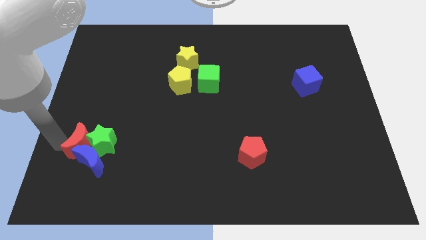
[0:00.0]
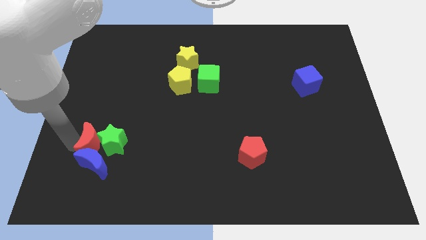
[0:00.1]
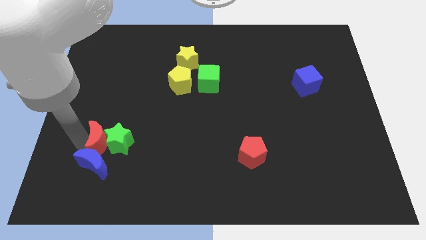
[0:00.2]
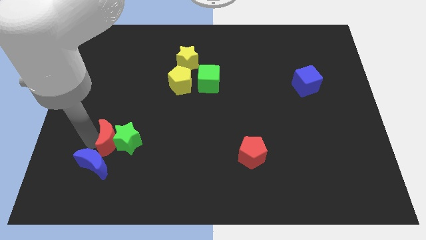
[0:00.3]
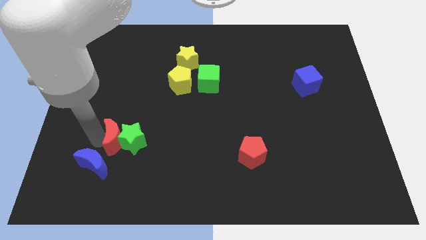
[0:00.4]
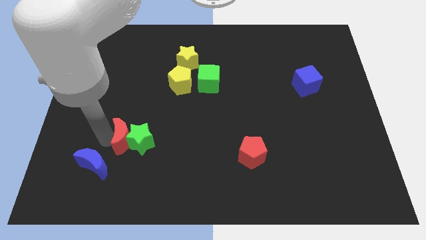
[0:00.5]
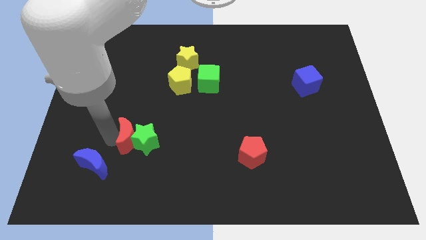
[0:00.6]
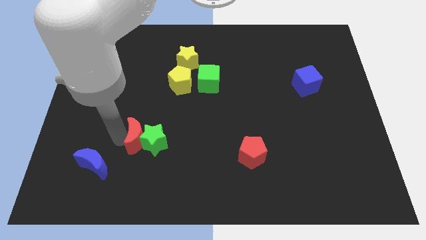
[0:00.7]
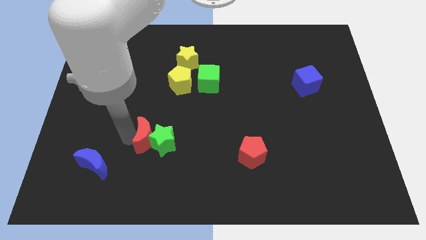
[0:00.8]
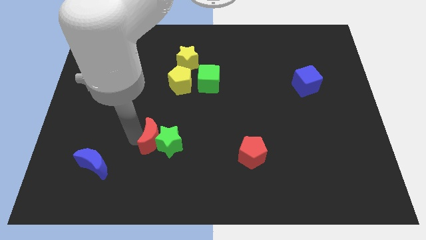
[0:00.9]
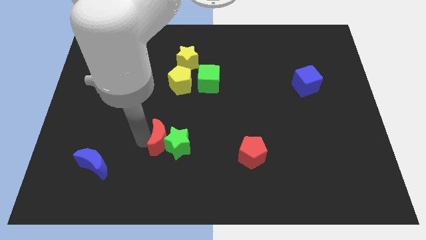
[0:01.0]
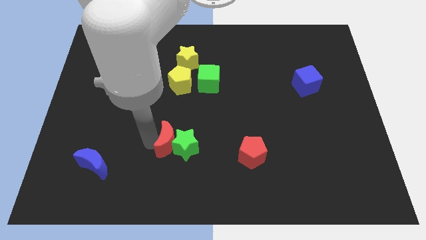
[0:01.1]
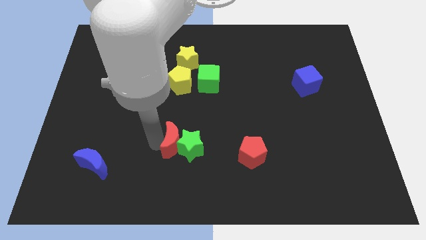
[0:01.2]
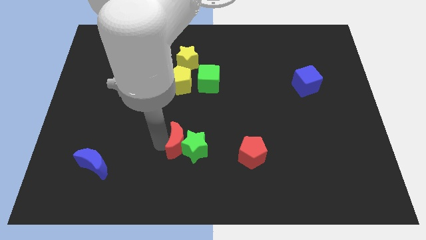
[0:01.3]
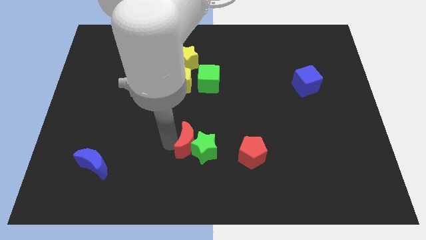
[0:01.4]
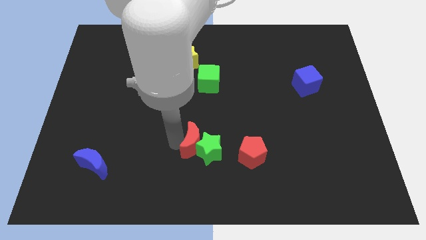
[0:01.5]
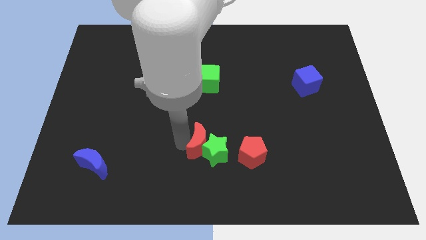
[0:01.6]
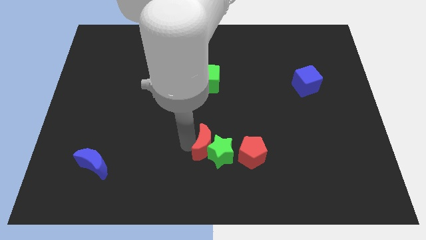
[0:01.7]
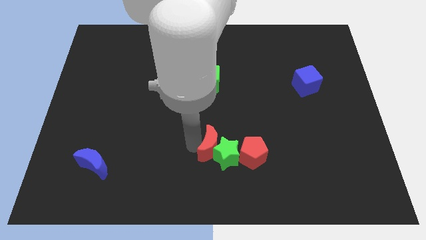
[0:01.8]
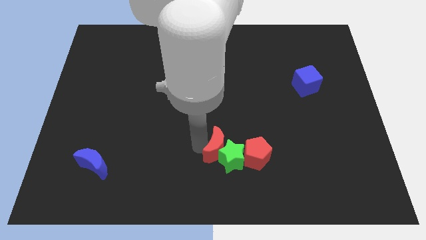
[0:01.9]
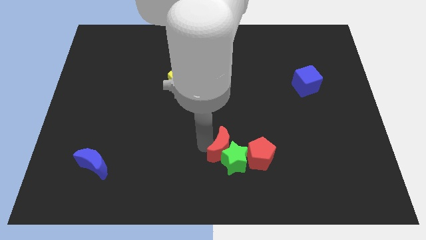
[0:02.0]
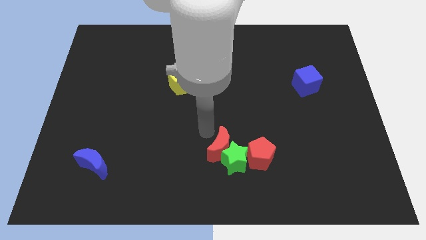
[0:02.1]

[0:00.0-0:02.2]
separate red moon and green star from blue moon

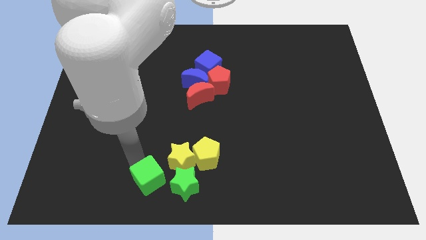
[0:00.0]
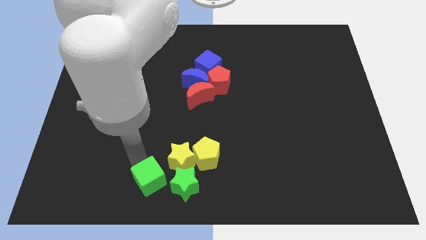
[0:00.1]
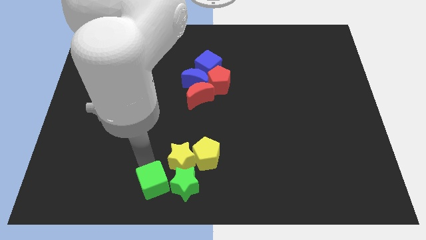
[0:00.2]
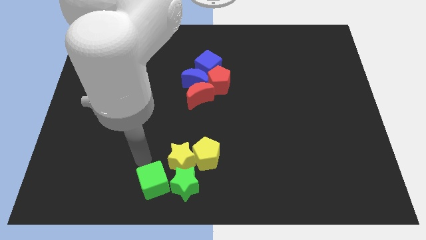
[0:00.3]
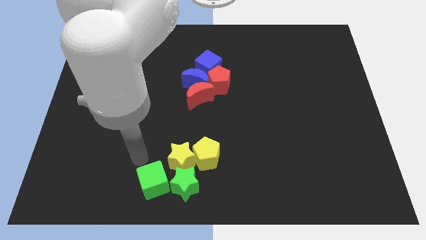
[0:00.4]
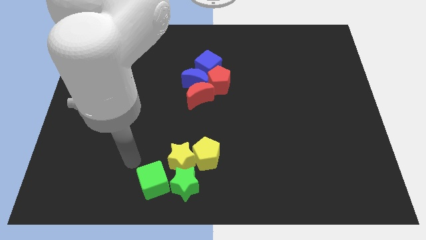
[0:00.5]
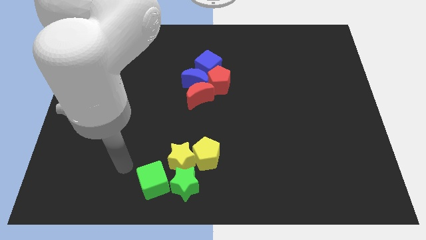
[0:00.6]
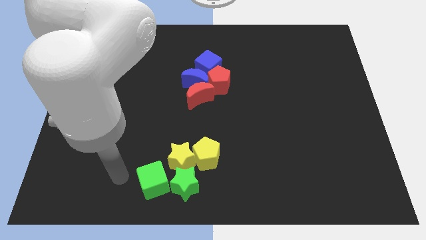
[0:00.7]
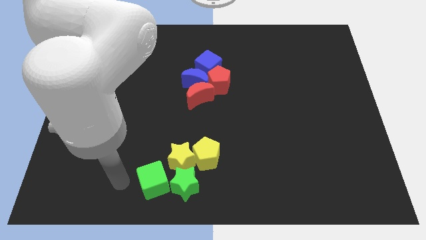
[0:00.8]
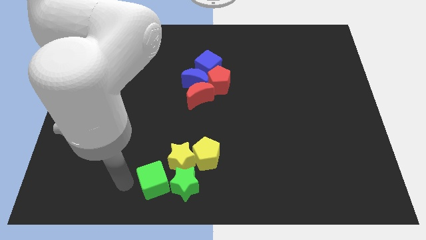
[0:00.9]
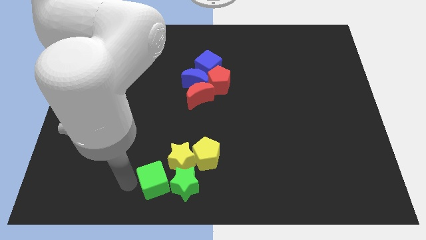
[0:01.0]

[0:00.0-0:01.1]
place the arm left to the green cube

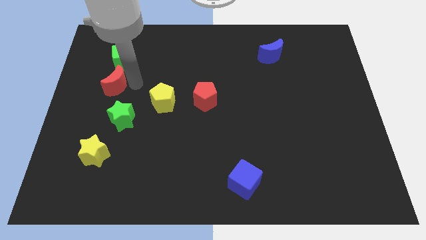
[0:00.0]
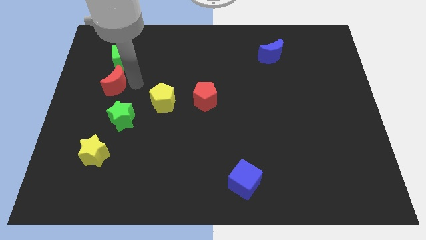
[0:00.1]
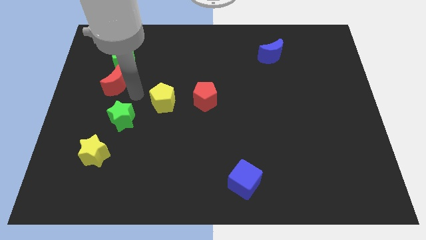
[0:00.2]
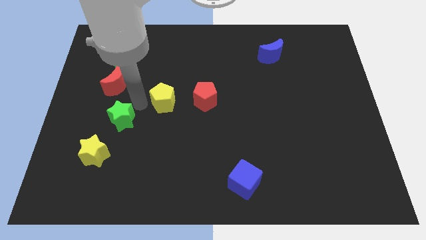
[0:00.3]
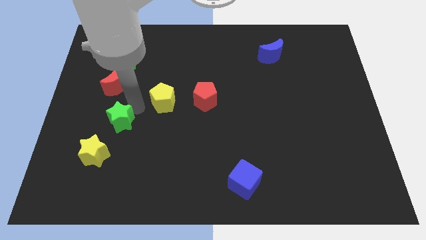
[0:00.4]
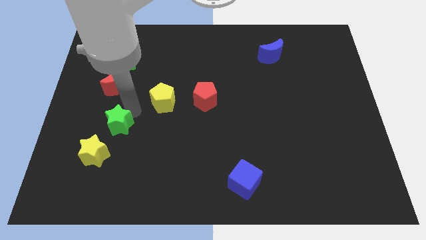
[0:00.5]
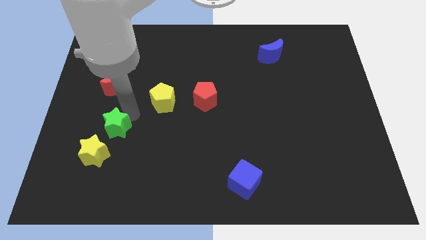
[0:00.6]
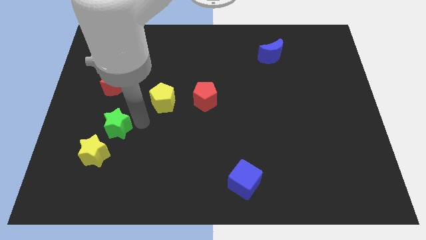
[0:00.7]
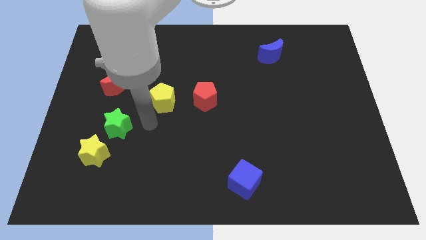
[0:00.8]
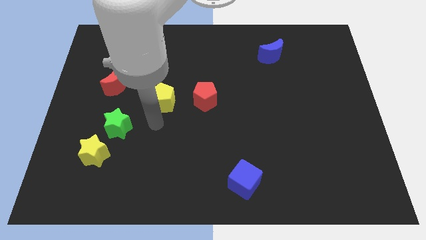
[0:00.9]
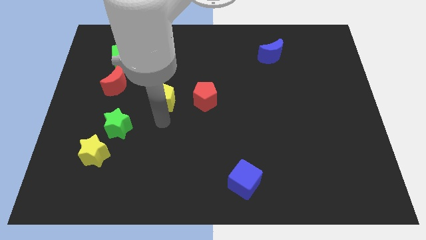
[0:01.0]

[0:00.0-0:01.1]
move the green star close to the yellow star

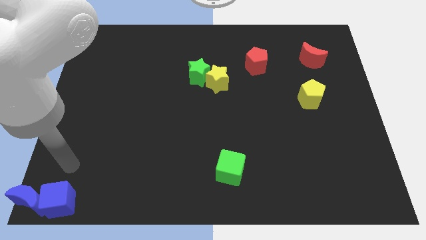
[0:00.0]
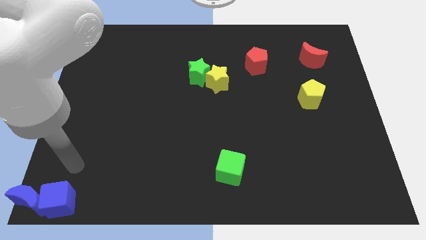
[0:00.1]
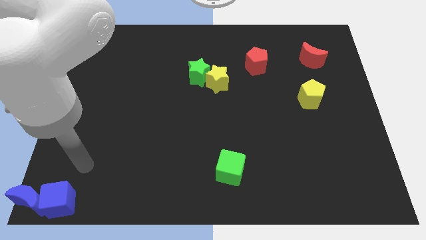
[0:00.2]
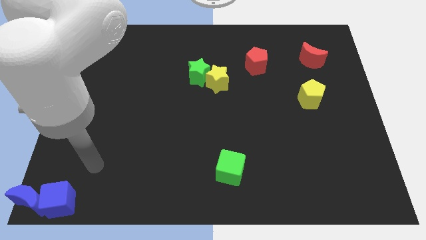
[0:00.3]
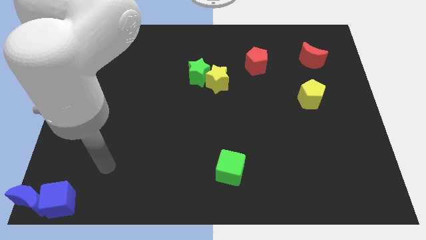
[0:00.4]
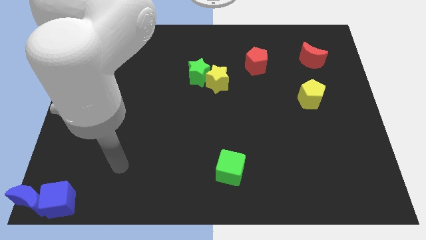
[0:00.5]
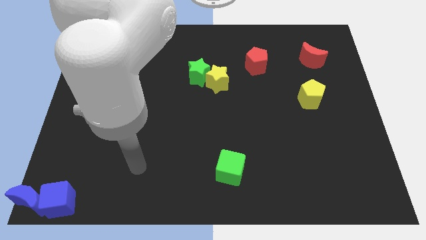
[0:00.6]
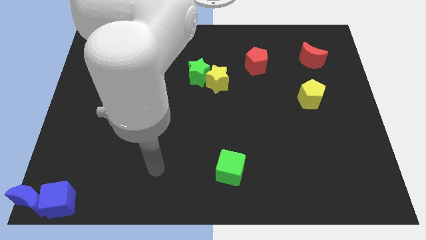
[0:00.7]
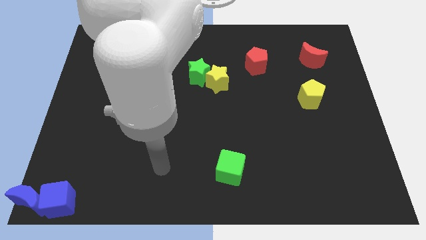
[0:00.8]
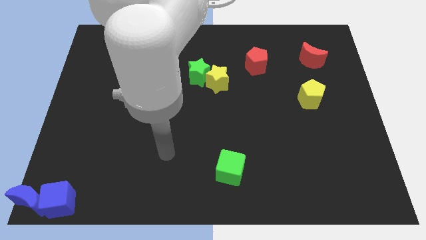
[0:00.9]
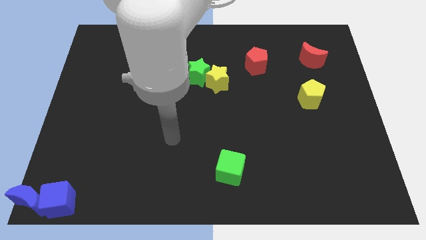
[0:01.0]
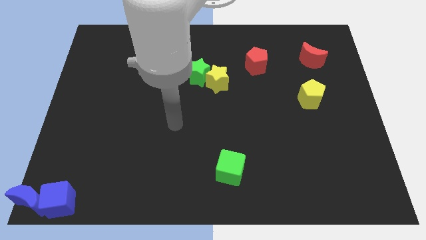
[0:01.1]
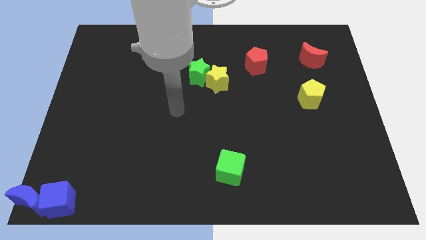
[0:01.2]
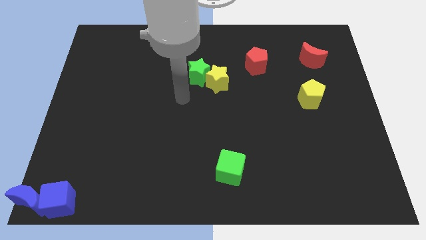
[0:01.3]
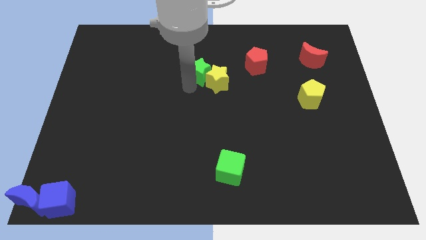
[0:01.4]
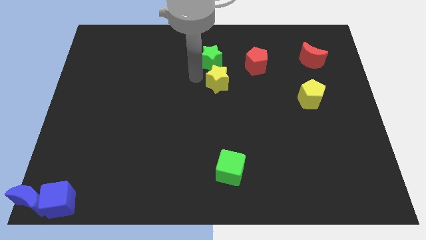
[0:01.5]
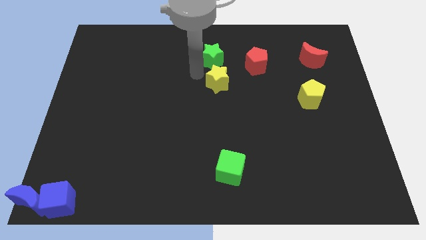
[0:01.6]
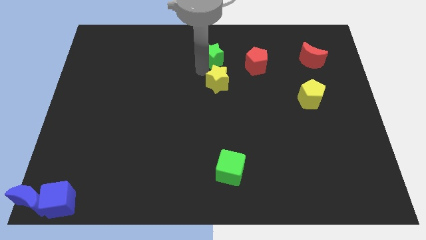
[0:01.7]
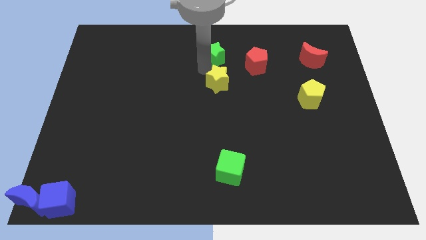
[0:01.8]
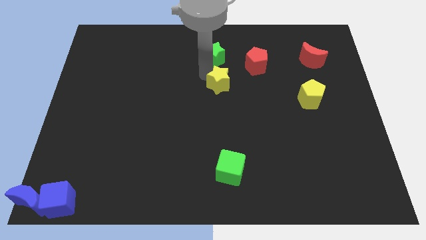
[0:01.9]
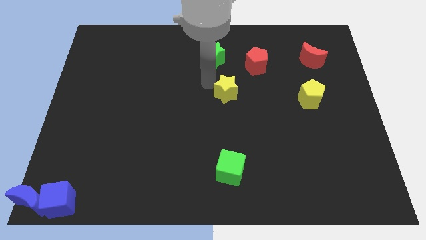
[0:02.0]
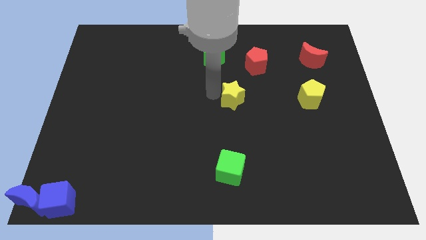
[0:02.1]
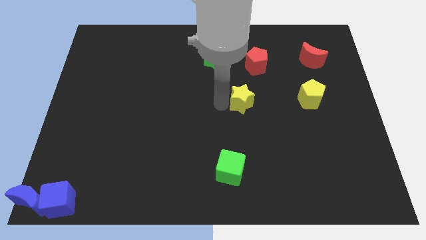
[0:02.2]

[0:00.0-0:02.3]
place the yellow star horizontally to the left side of the yellow pentagon

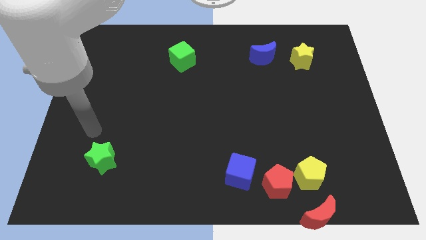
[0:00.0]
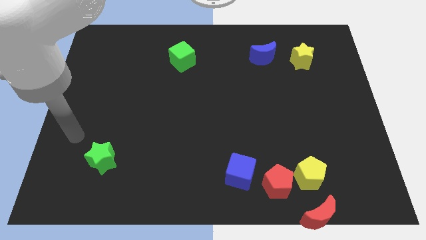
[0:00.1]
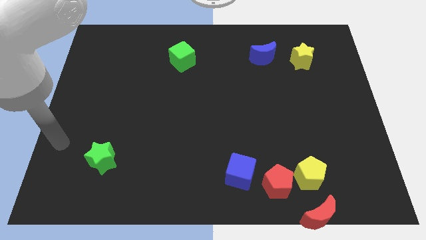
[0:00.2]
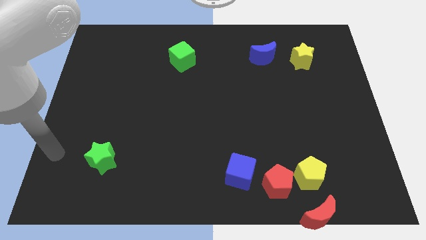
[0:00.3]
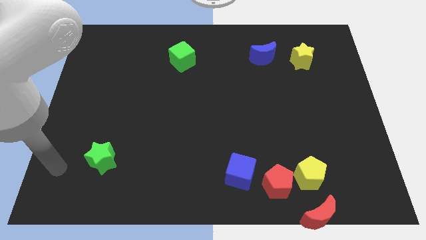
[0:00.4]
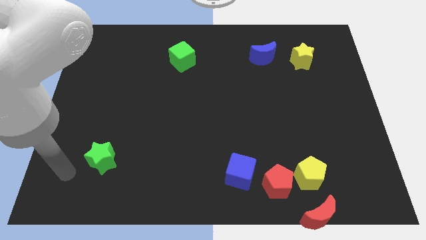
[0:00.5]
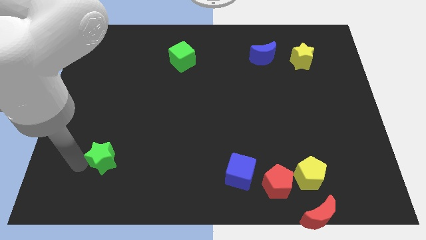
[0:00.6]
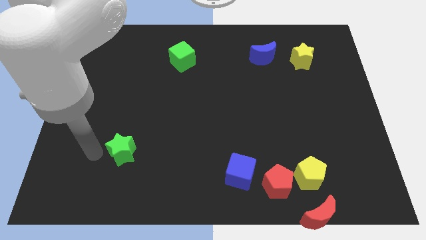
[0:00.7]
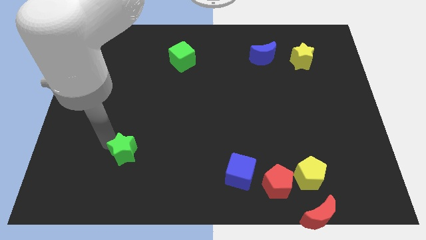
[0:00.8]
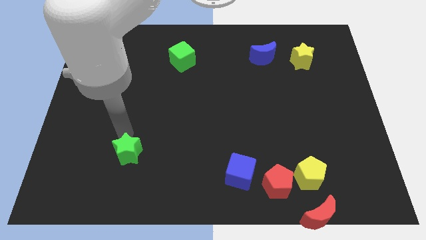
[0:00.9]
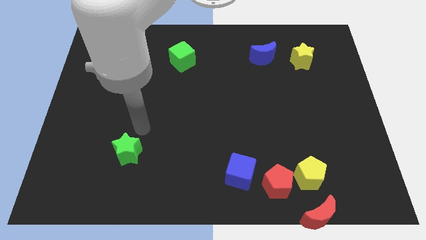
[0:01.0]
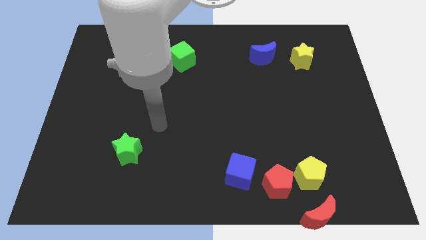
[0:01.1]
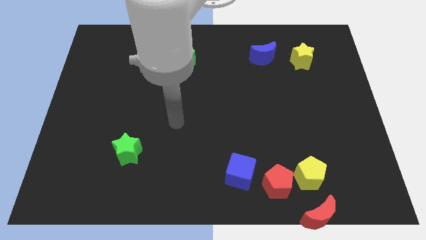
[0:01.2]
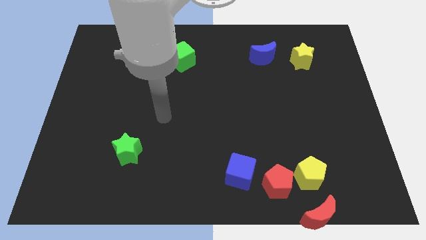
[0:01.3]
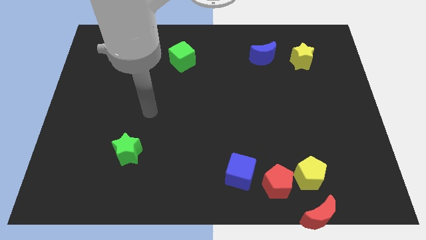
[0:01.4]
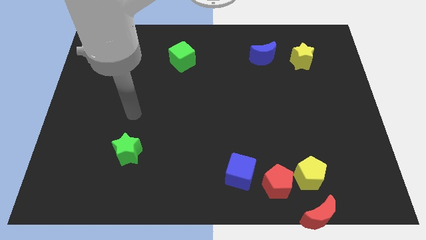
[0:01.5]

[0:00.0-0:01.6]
slightly push the green star towards the blue cube

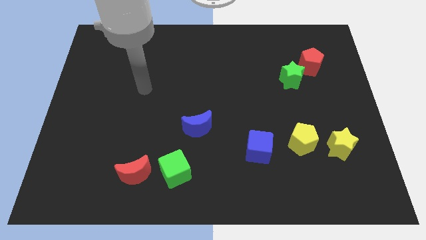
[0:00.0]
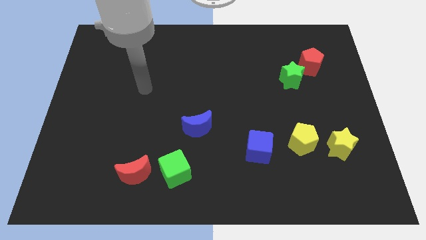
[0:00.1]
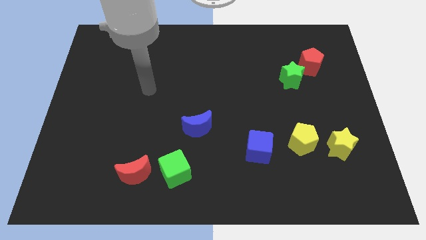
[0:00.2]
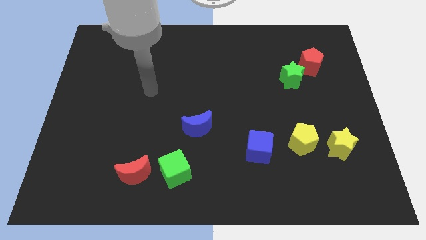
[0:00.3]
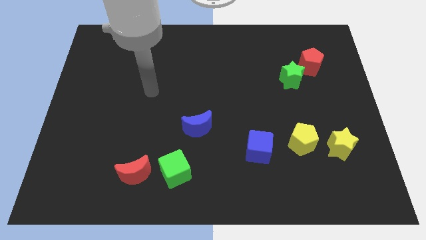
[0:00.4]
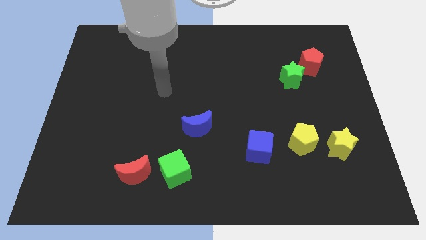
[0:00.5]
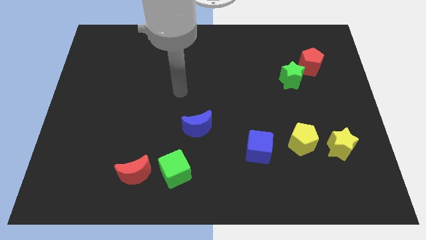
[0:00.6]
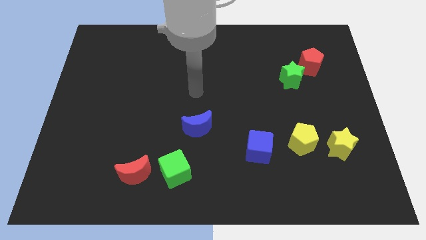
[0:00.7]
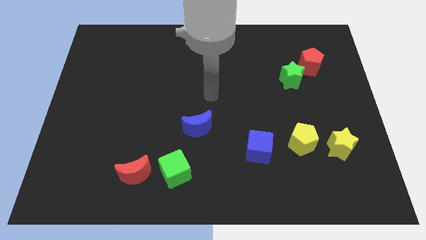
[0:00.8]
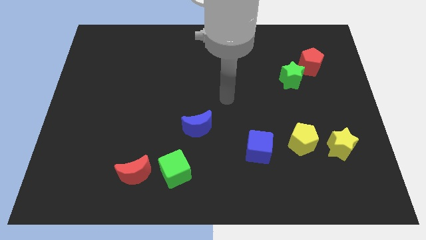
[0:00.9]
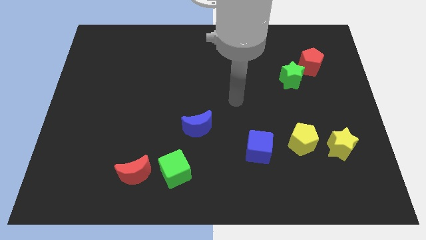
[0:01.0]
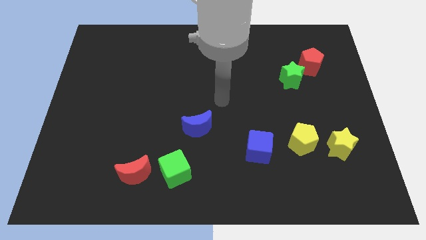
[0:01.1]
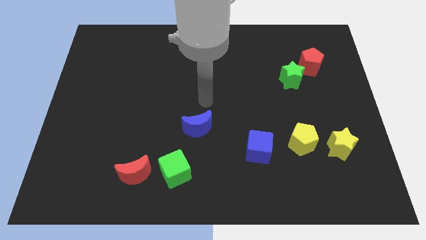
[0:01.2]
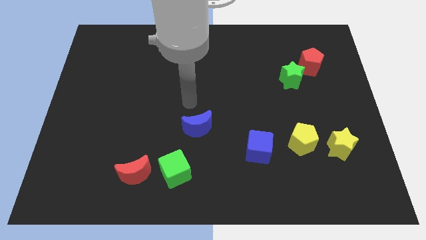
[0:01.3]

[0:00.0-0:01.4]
put your arm on the top of the blue crescent
